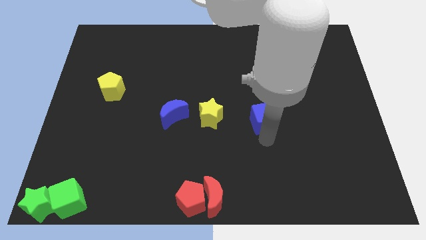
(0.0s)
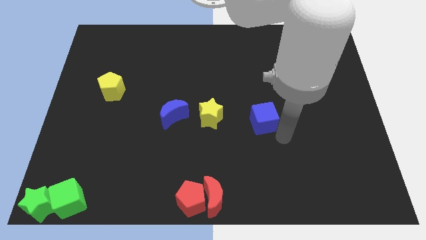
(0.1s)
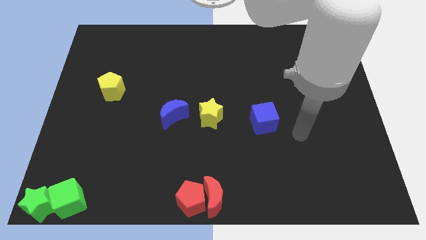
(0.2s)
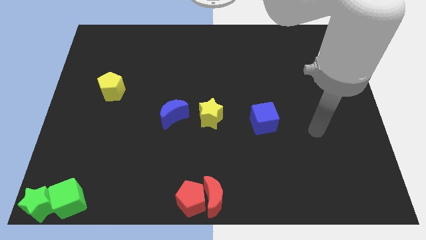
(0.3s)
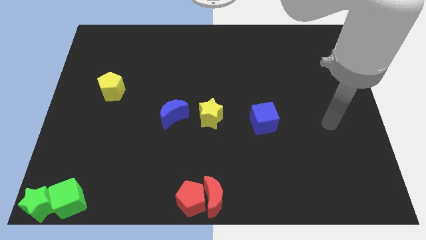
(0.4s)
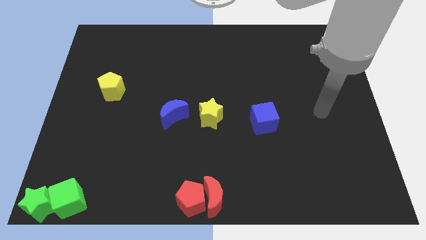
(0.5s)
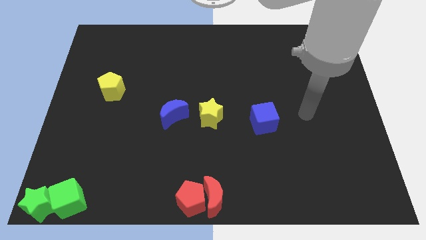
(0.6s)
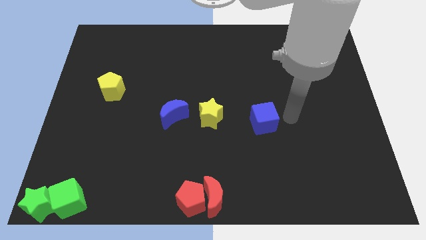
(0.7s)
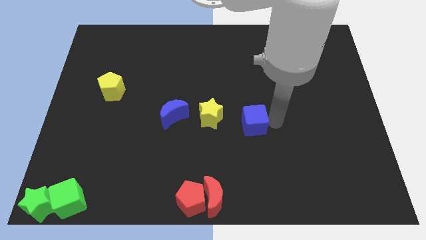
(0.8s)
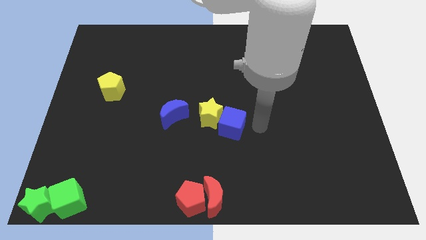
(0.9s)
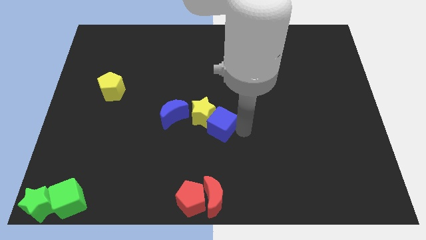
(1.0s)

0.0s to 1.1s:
push blue cube close to yellow star

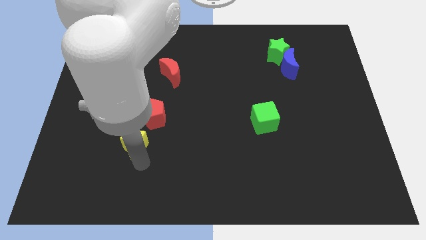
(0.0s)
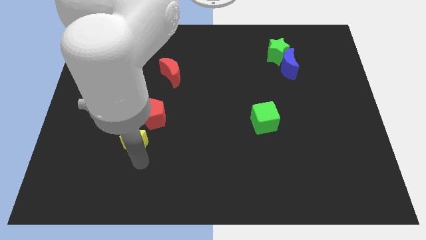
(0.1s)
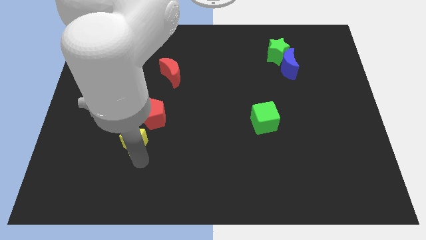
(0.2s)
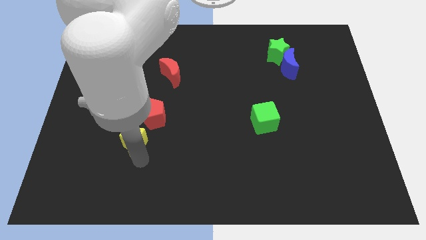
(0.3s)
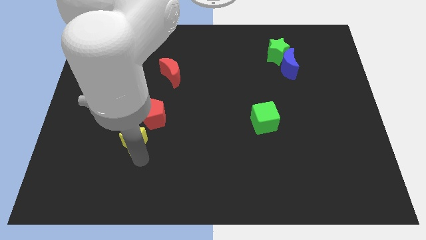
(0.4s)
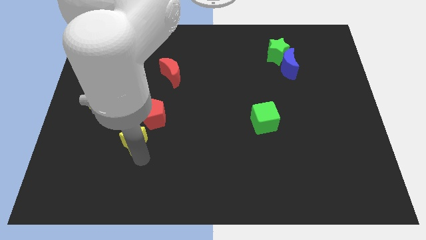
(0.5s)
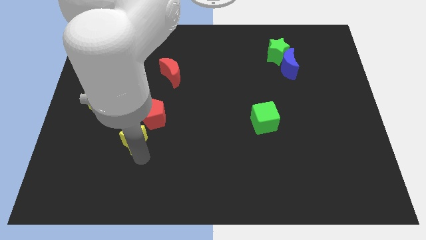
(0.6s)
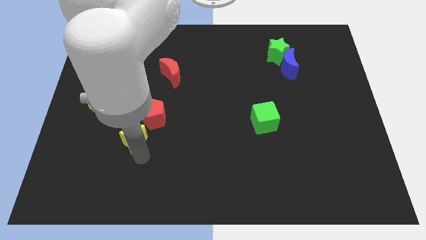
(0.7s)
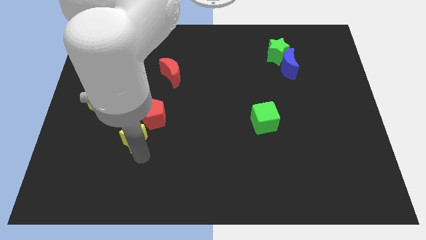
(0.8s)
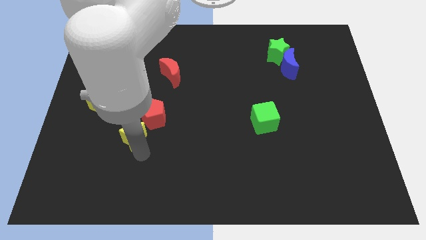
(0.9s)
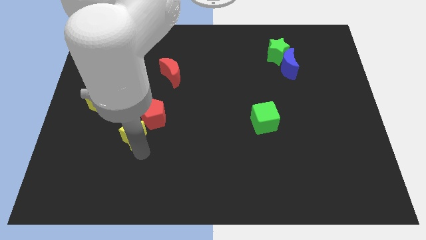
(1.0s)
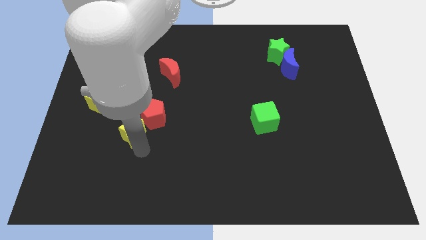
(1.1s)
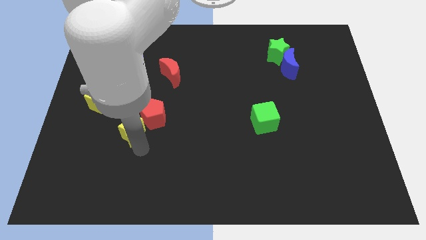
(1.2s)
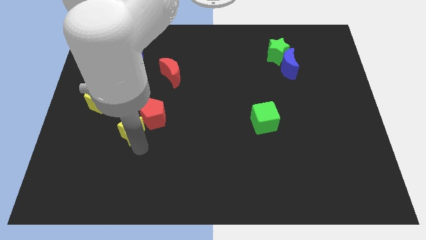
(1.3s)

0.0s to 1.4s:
place yellow star to the bottom left of red pentagon

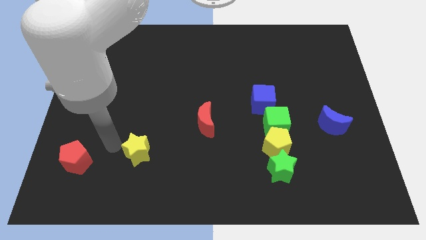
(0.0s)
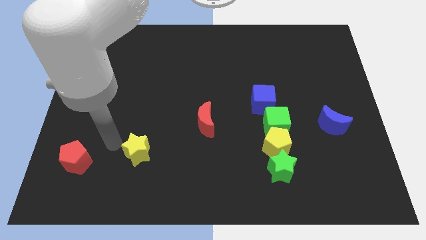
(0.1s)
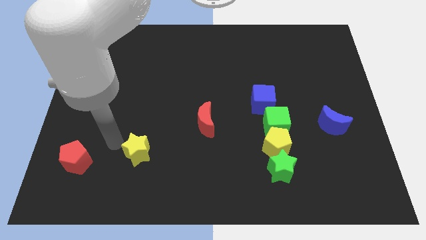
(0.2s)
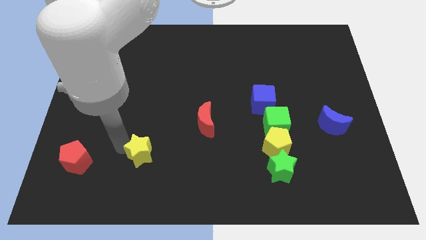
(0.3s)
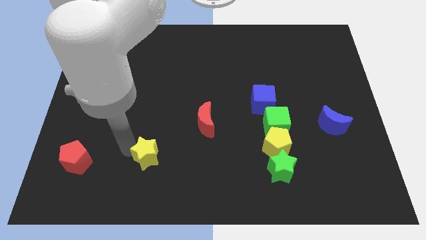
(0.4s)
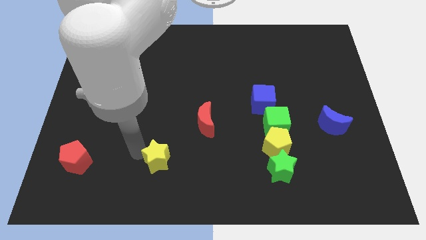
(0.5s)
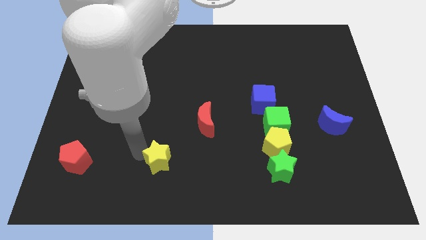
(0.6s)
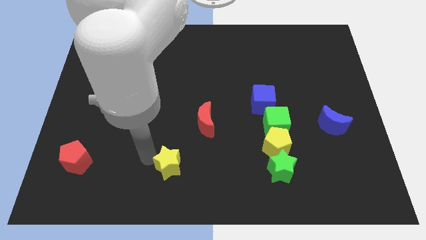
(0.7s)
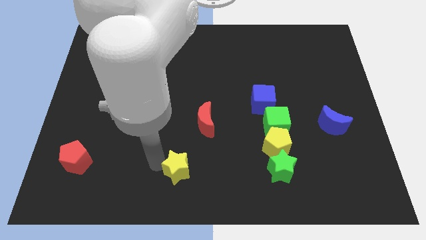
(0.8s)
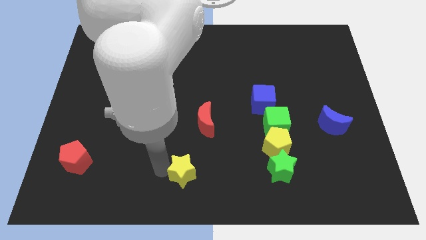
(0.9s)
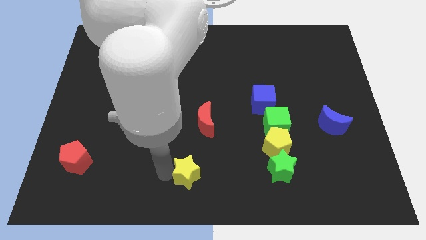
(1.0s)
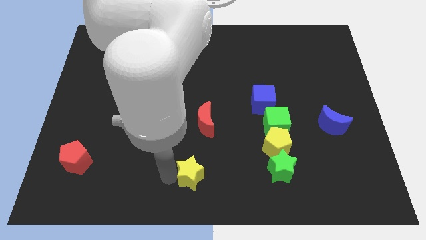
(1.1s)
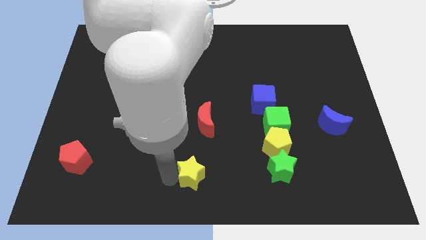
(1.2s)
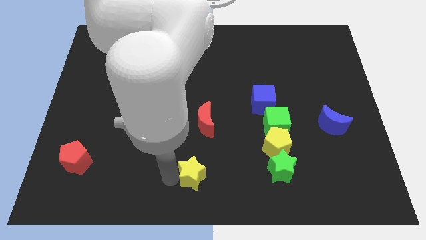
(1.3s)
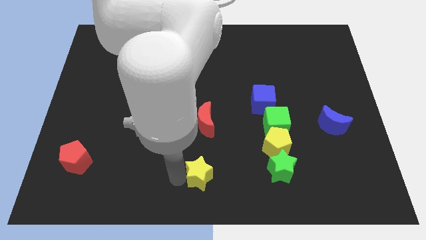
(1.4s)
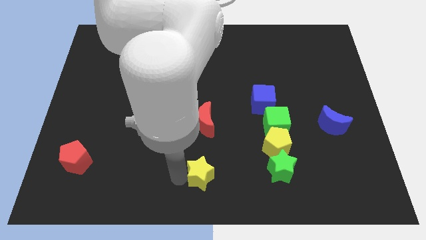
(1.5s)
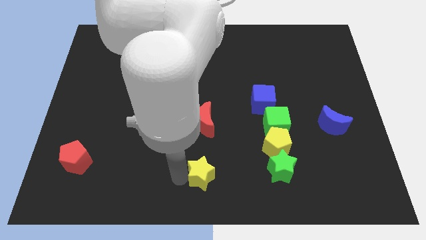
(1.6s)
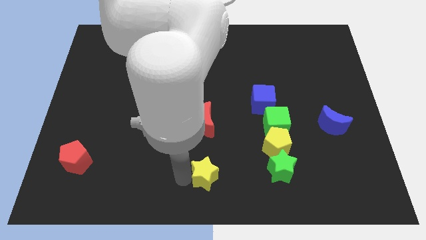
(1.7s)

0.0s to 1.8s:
place yellow star to the bottom of red moon

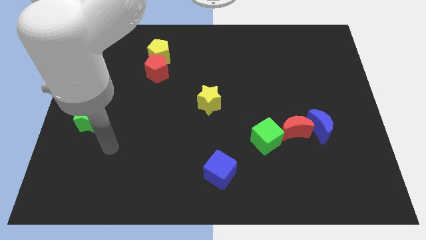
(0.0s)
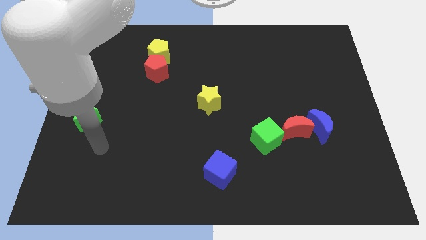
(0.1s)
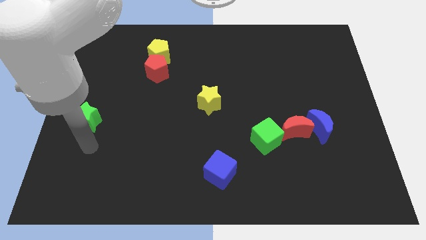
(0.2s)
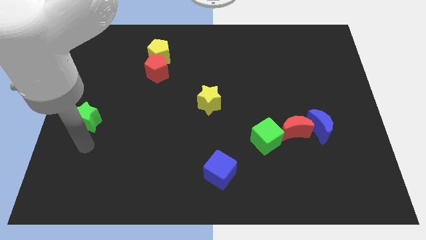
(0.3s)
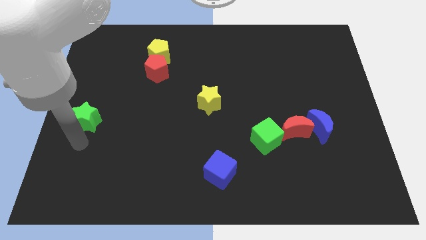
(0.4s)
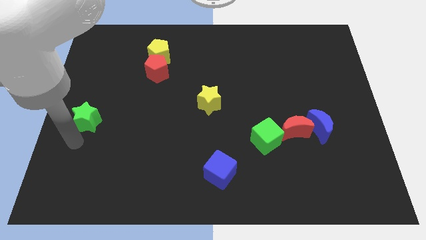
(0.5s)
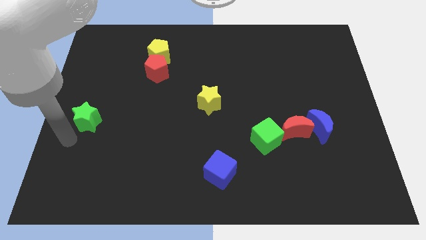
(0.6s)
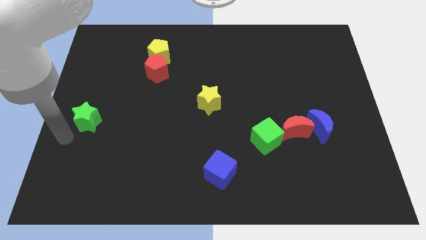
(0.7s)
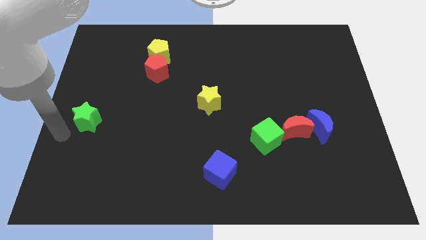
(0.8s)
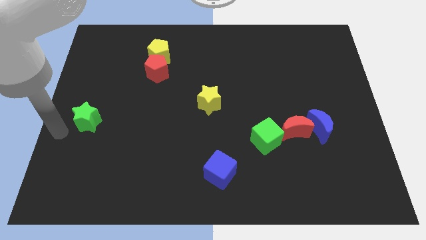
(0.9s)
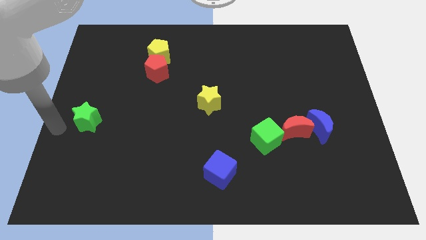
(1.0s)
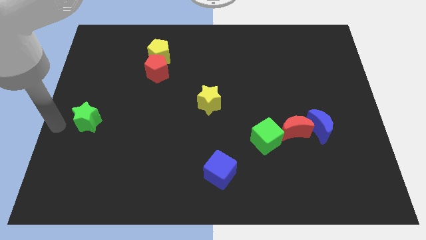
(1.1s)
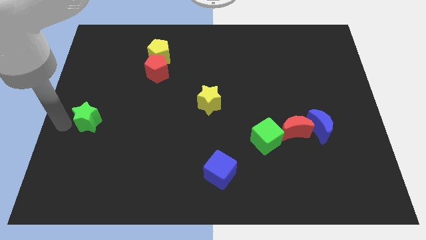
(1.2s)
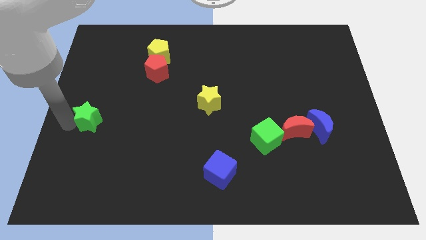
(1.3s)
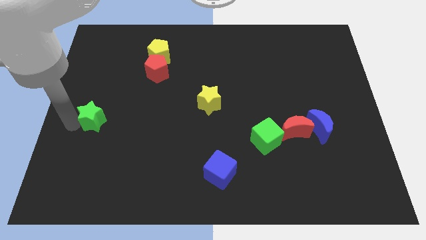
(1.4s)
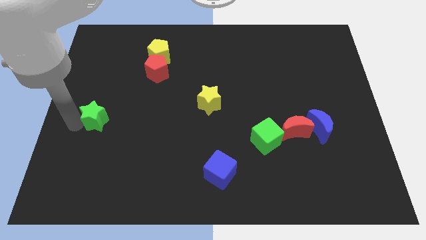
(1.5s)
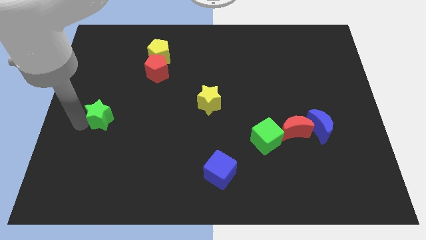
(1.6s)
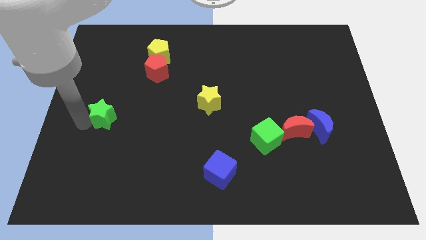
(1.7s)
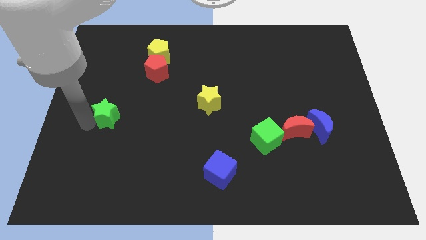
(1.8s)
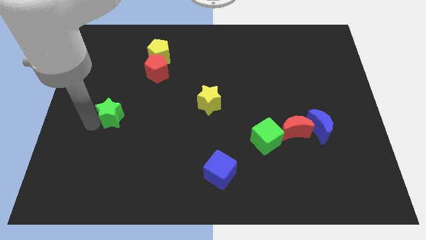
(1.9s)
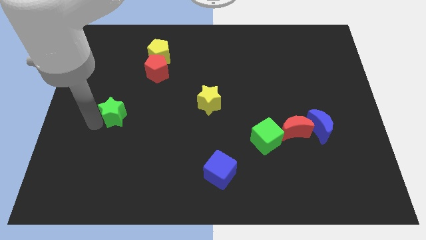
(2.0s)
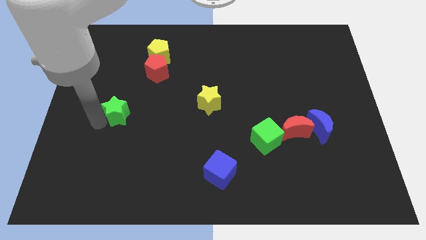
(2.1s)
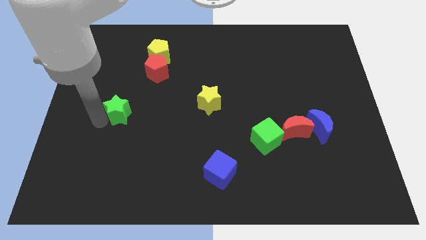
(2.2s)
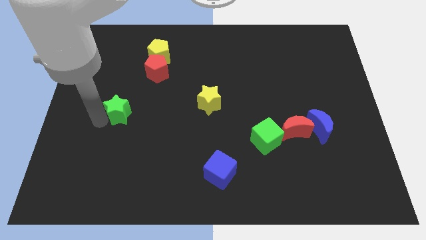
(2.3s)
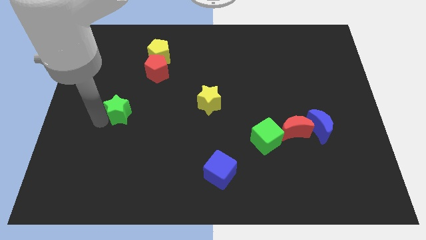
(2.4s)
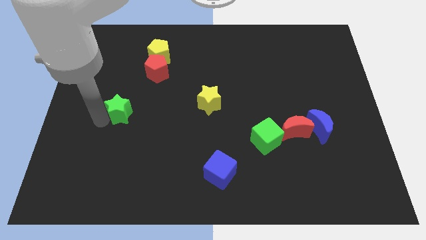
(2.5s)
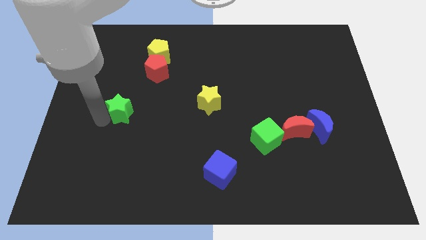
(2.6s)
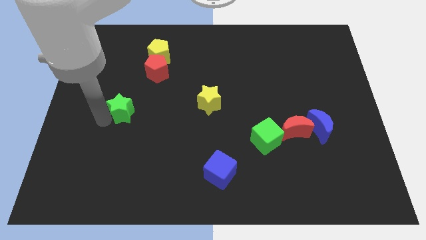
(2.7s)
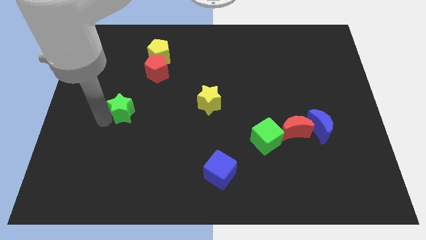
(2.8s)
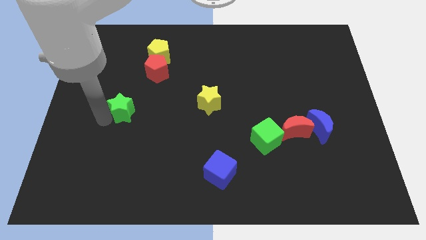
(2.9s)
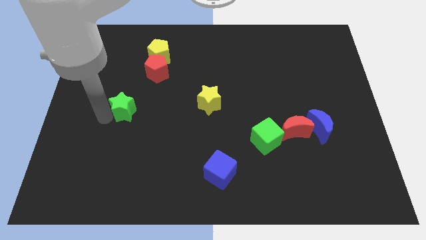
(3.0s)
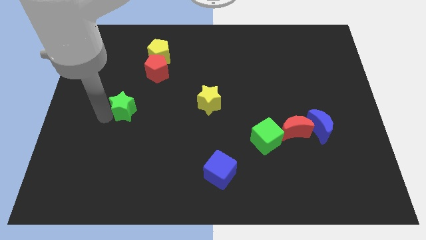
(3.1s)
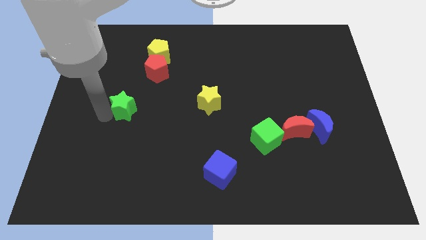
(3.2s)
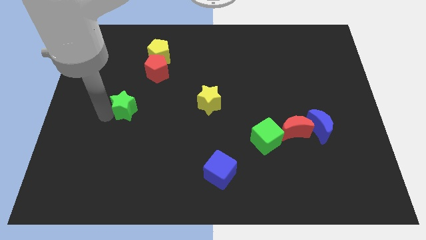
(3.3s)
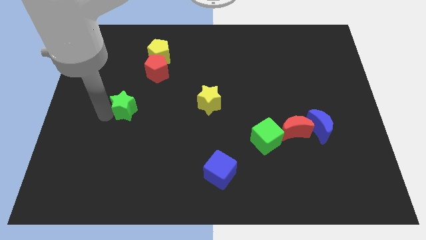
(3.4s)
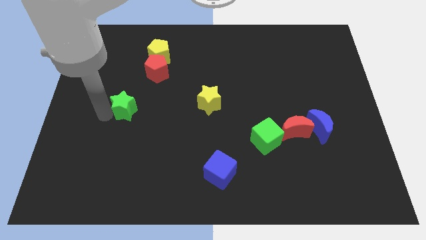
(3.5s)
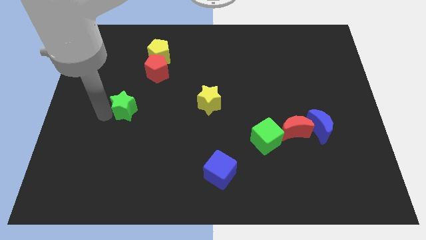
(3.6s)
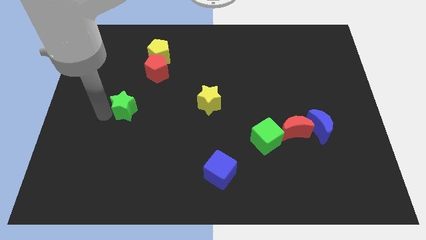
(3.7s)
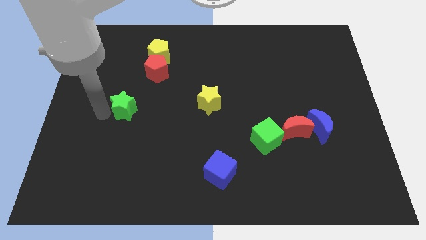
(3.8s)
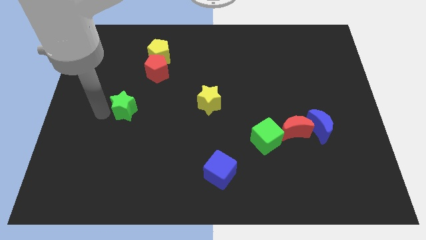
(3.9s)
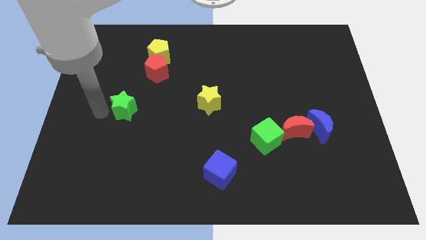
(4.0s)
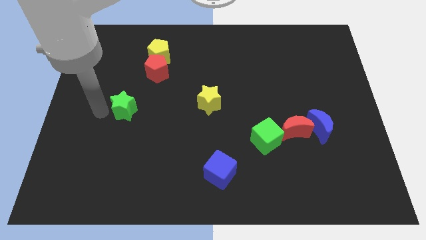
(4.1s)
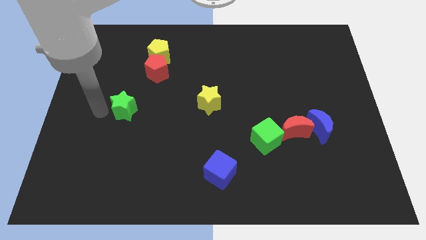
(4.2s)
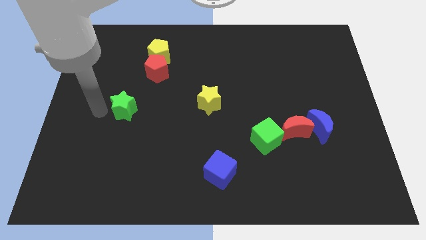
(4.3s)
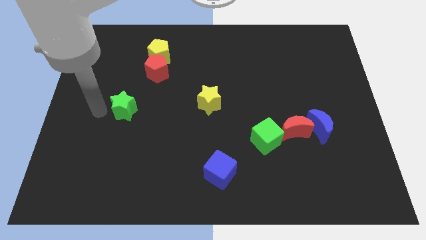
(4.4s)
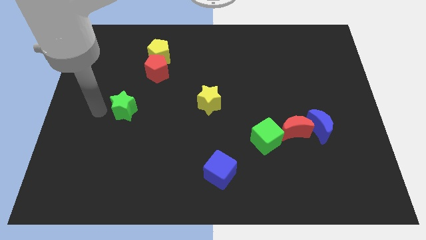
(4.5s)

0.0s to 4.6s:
push the yellow star towards the right slightly

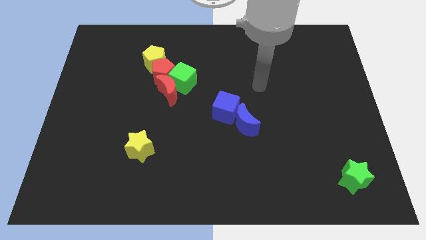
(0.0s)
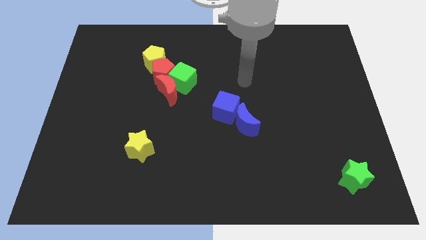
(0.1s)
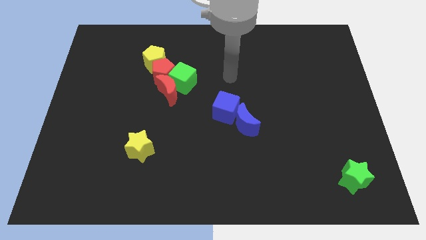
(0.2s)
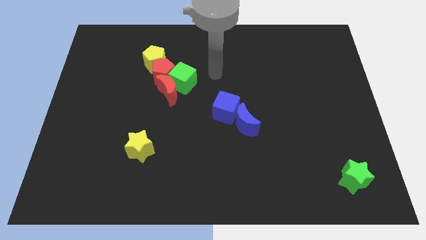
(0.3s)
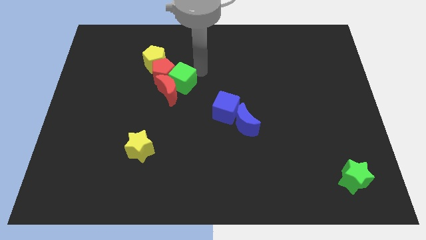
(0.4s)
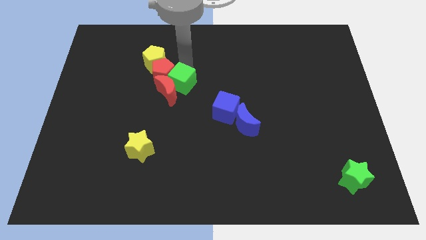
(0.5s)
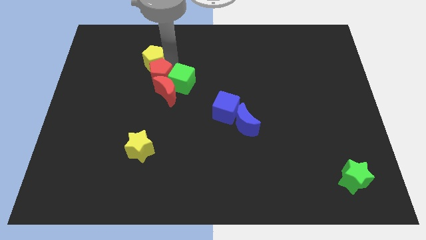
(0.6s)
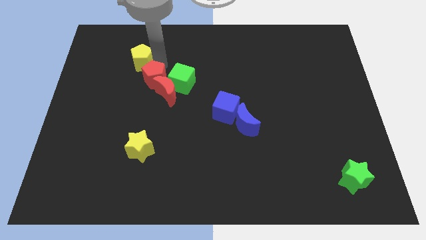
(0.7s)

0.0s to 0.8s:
place the arm diagonally to the red pentagon
